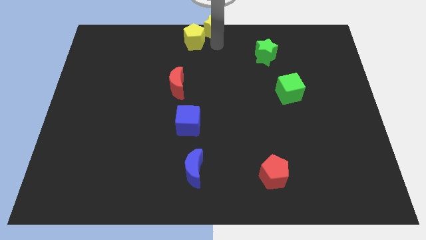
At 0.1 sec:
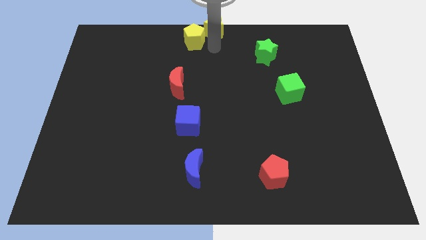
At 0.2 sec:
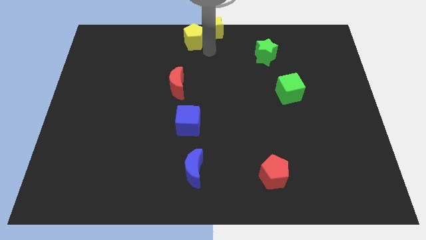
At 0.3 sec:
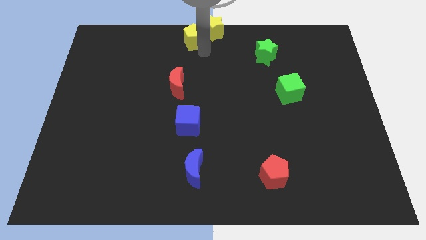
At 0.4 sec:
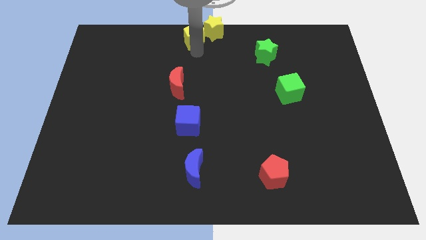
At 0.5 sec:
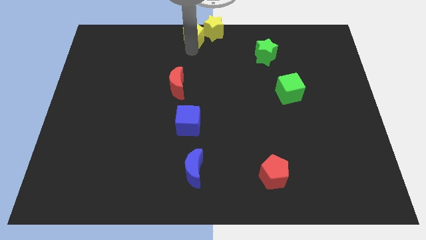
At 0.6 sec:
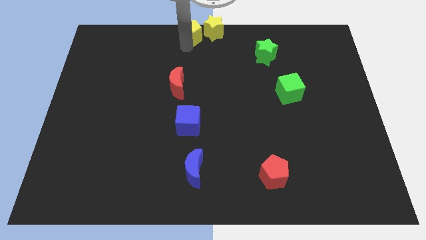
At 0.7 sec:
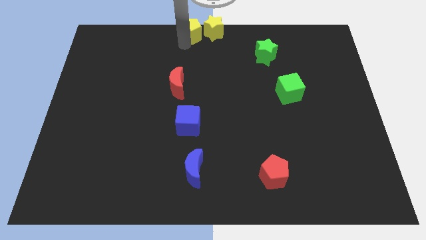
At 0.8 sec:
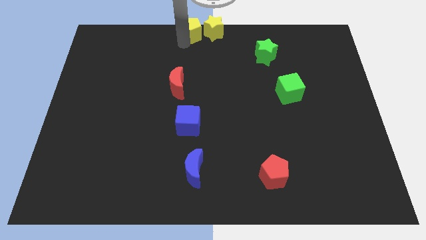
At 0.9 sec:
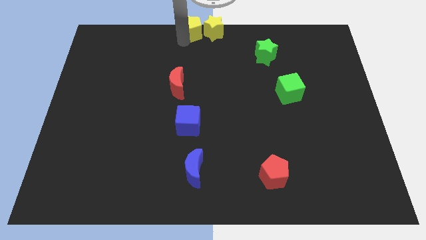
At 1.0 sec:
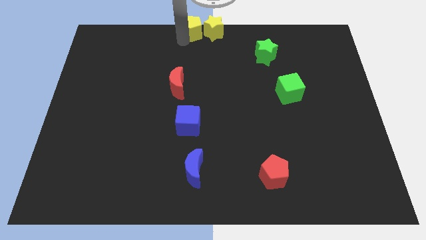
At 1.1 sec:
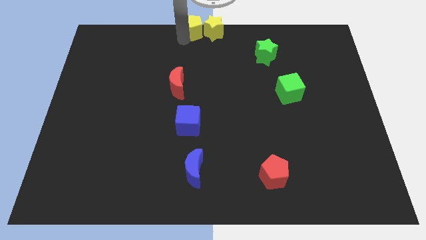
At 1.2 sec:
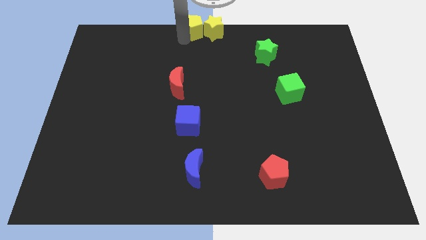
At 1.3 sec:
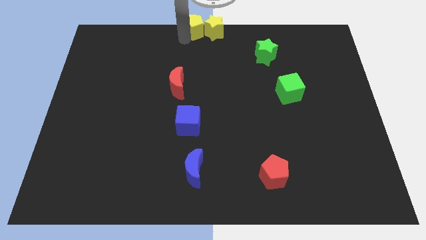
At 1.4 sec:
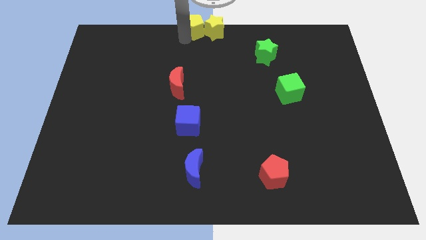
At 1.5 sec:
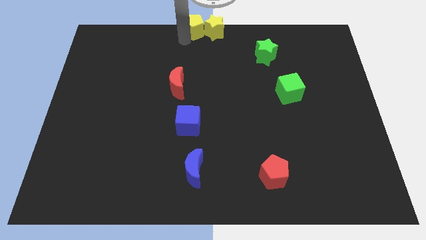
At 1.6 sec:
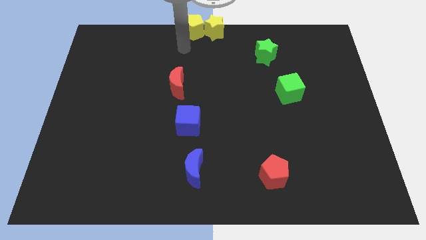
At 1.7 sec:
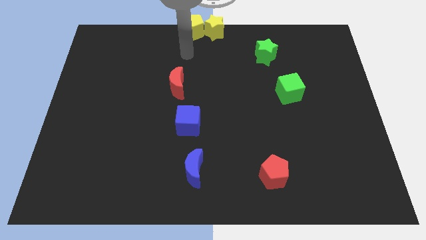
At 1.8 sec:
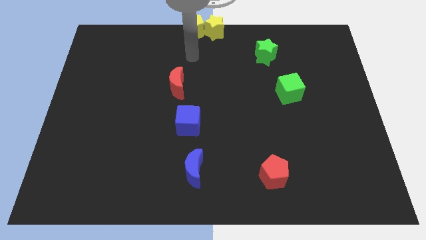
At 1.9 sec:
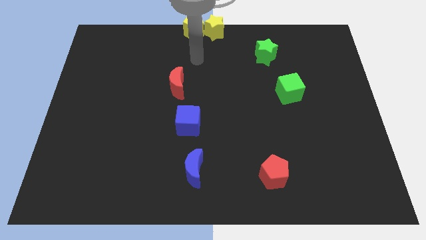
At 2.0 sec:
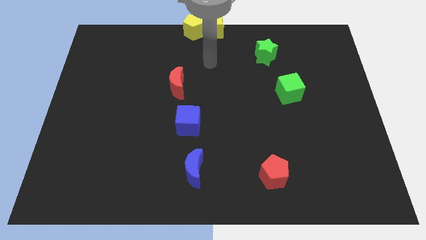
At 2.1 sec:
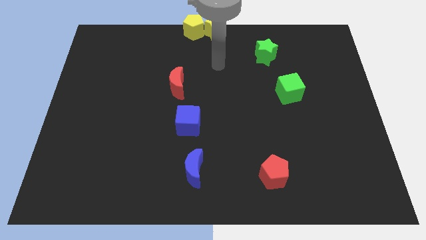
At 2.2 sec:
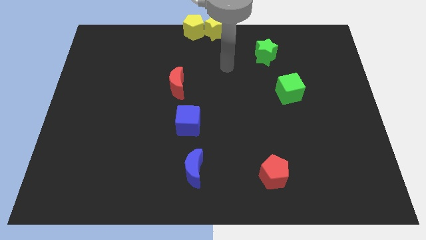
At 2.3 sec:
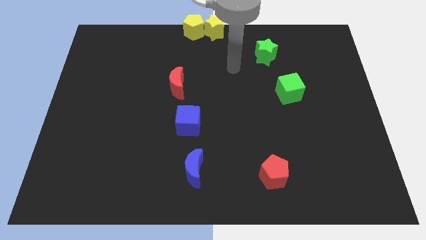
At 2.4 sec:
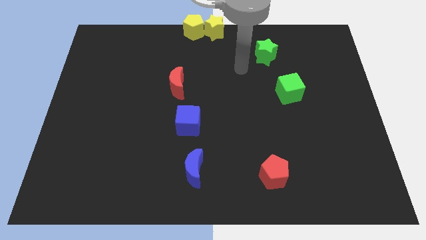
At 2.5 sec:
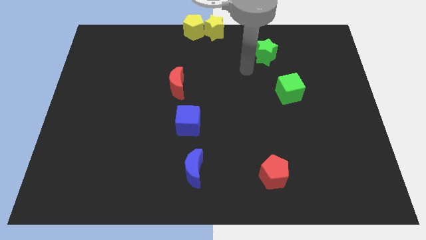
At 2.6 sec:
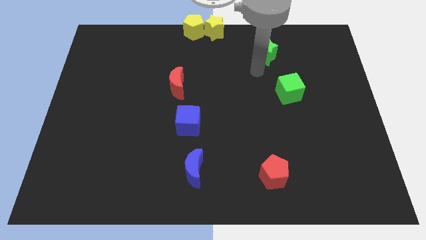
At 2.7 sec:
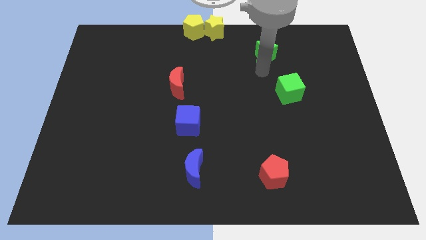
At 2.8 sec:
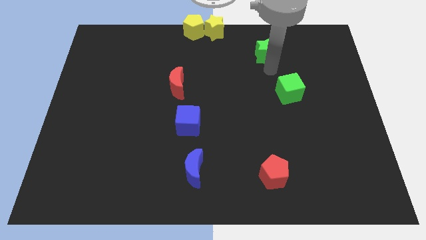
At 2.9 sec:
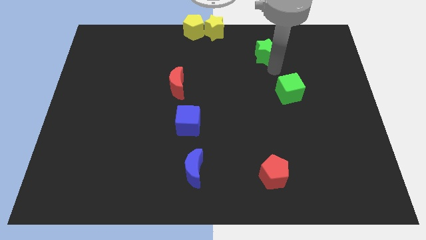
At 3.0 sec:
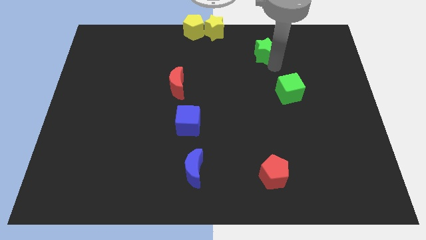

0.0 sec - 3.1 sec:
place the yellow pentagon left to the yellow star

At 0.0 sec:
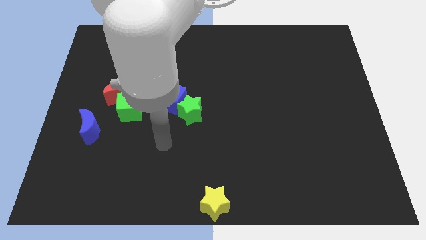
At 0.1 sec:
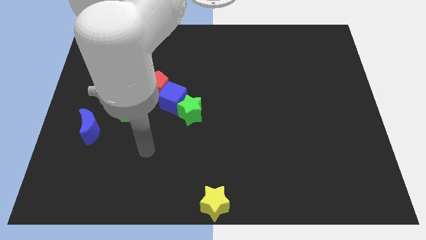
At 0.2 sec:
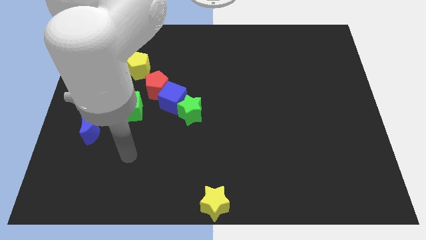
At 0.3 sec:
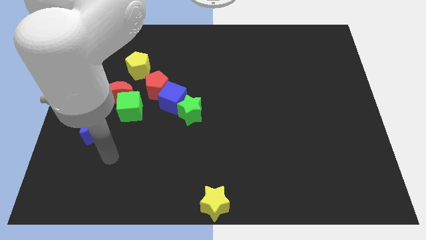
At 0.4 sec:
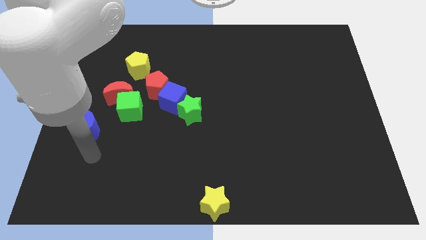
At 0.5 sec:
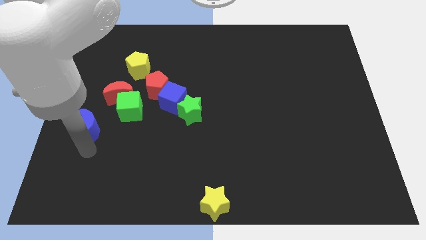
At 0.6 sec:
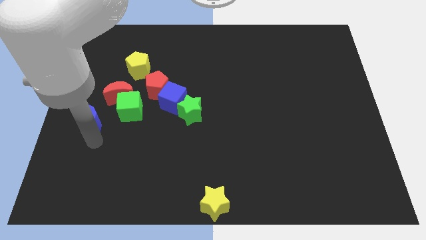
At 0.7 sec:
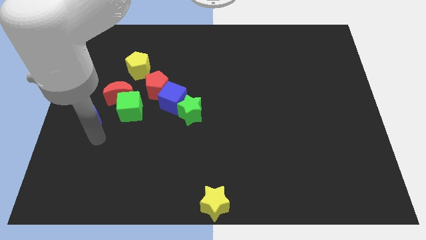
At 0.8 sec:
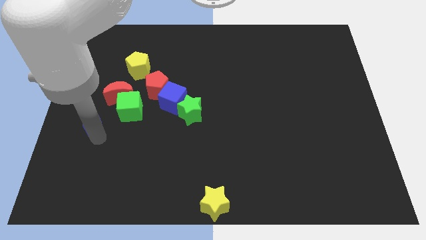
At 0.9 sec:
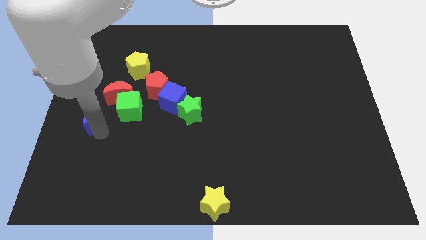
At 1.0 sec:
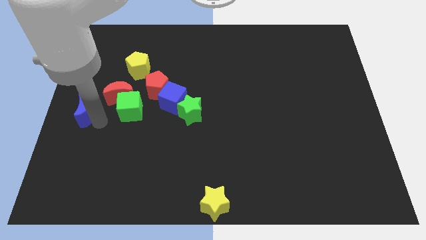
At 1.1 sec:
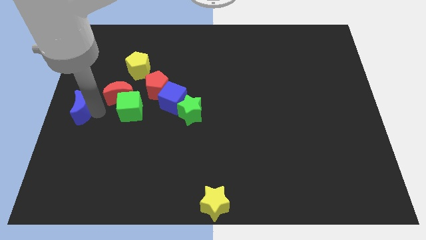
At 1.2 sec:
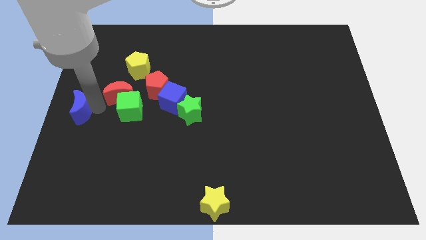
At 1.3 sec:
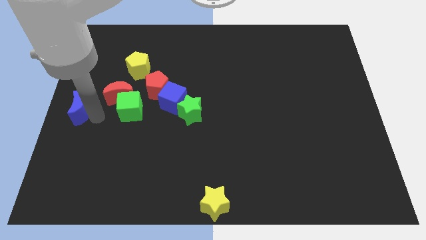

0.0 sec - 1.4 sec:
move the blue crescent parallel to the green cube

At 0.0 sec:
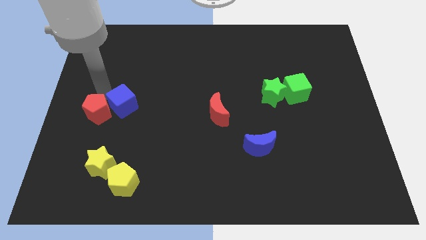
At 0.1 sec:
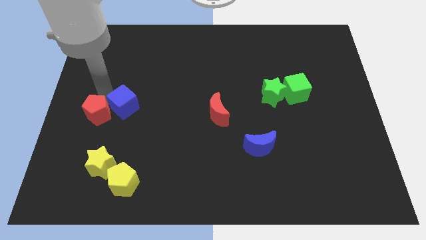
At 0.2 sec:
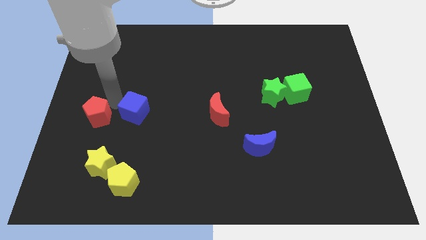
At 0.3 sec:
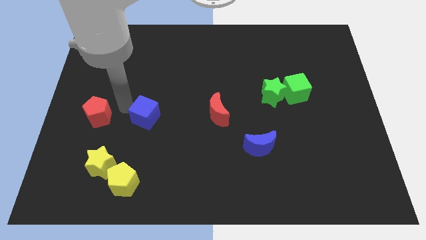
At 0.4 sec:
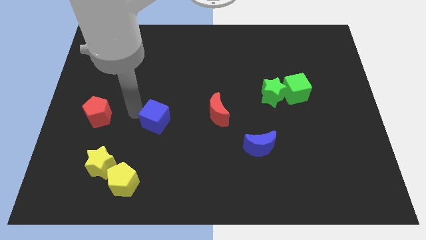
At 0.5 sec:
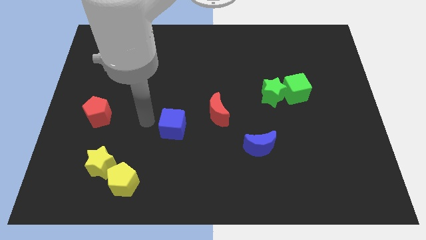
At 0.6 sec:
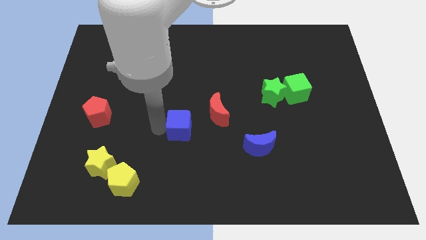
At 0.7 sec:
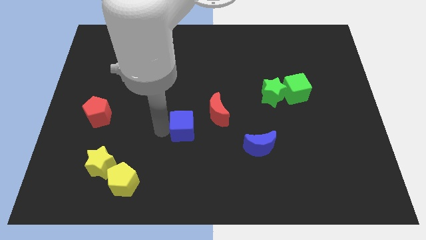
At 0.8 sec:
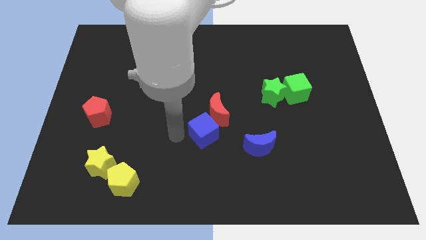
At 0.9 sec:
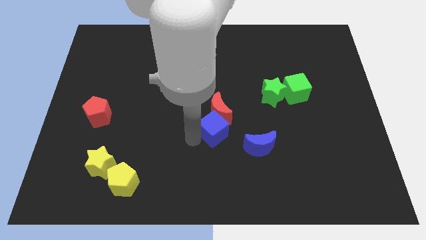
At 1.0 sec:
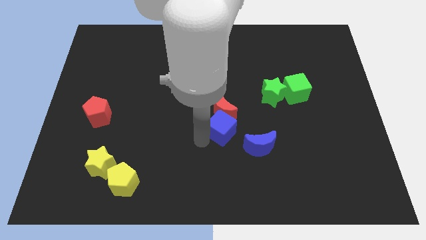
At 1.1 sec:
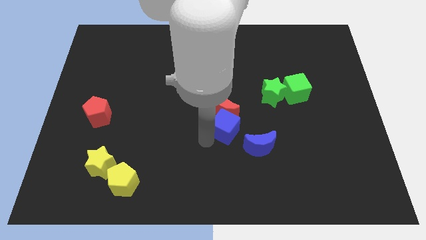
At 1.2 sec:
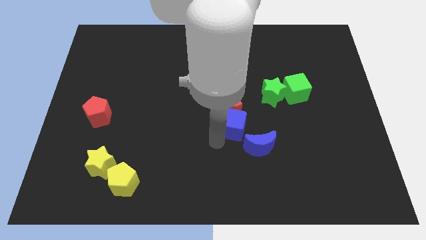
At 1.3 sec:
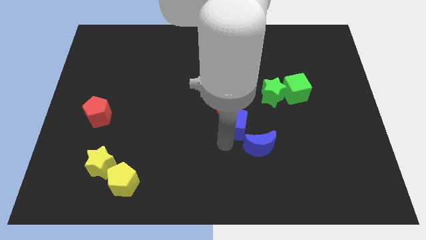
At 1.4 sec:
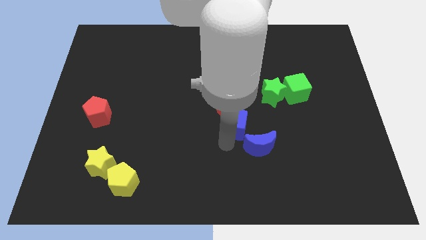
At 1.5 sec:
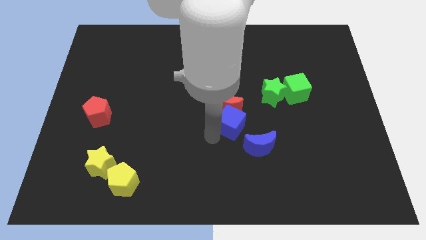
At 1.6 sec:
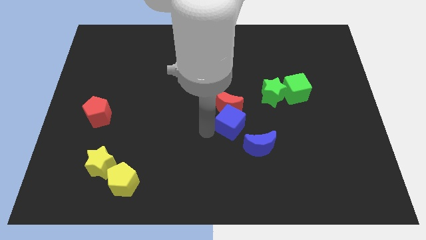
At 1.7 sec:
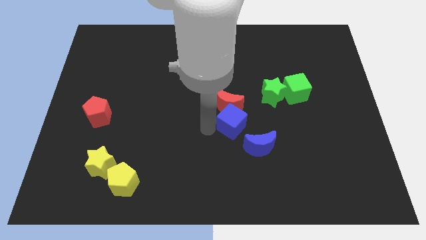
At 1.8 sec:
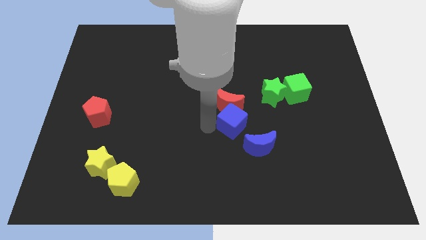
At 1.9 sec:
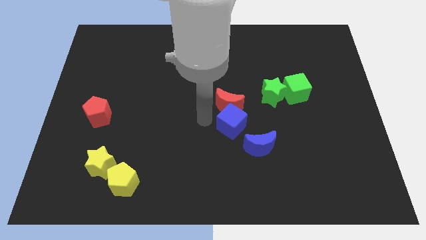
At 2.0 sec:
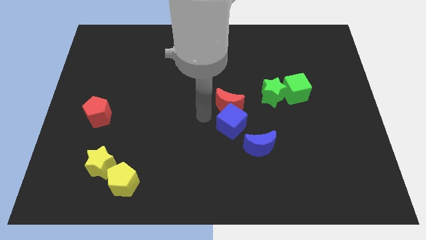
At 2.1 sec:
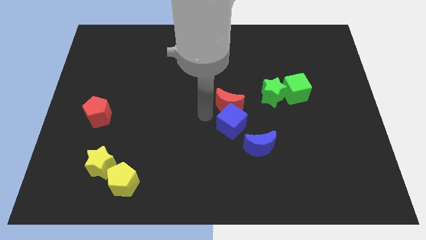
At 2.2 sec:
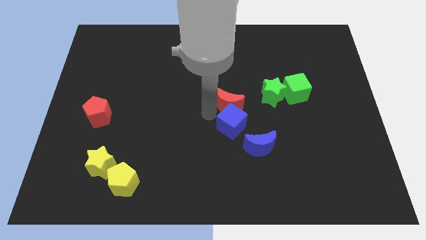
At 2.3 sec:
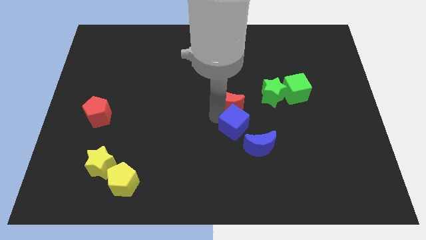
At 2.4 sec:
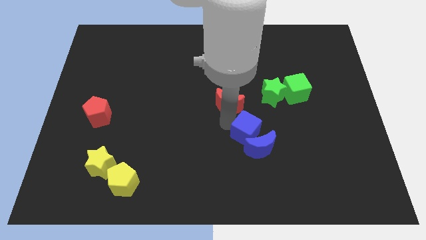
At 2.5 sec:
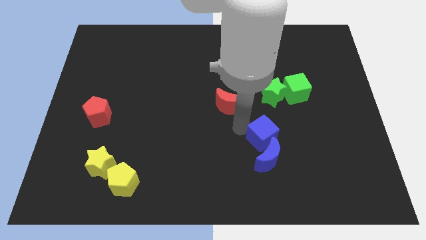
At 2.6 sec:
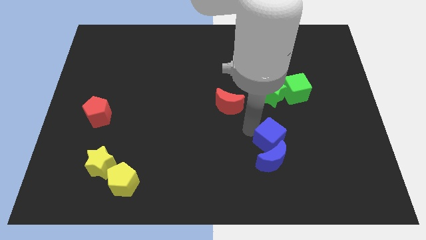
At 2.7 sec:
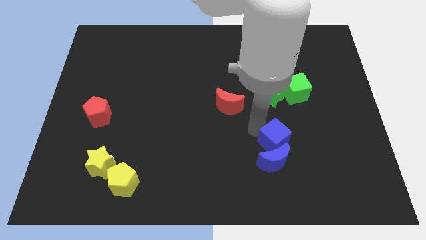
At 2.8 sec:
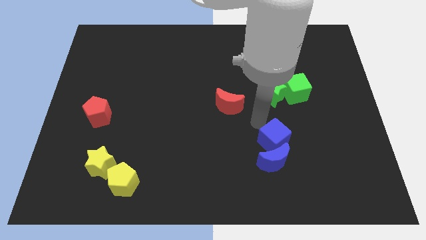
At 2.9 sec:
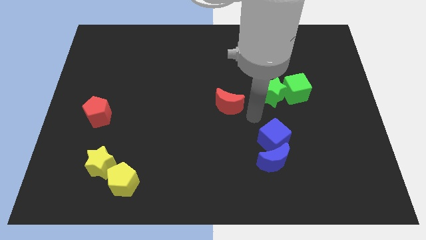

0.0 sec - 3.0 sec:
push the blue cube into the top side of the blue moon

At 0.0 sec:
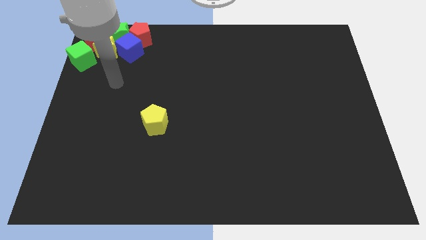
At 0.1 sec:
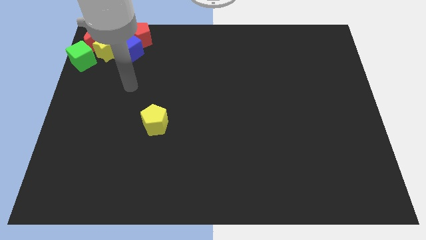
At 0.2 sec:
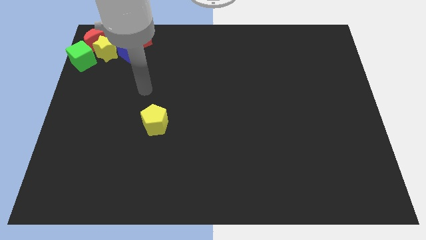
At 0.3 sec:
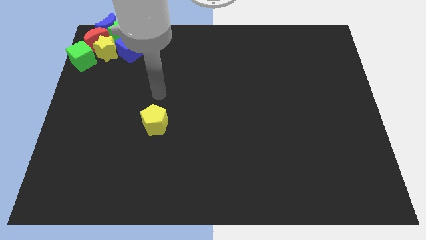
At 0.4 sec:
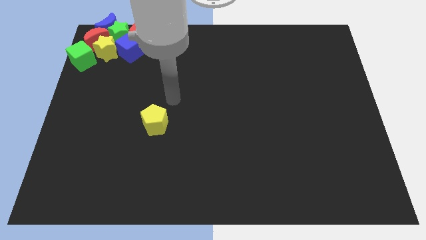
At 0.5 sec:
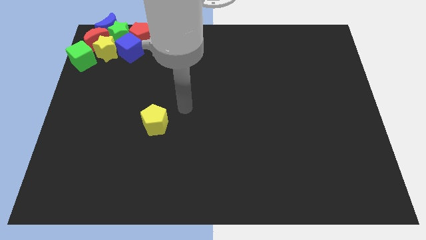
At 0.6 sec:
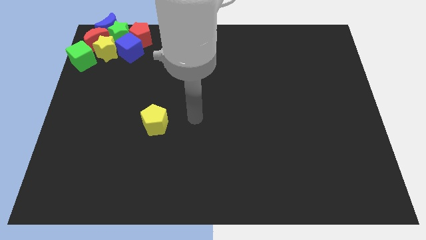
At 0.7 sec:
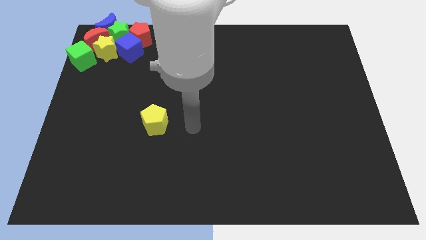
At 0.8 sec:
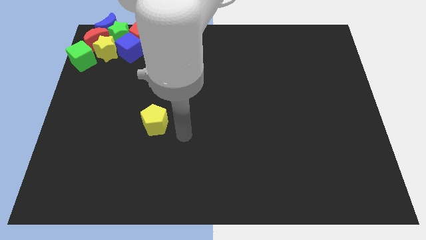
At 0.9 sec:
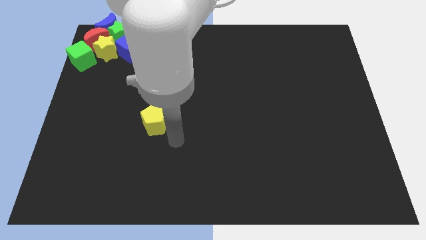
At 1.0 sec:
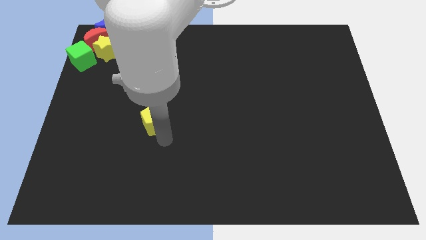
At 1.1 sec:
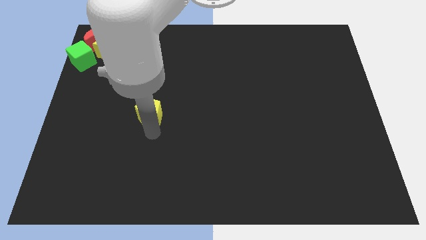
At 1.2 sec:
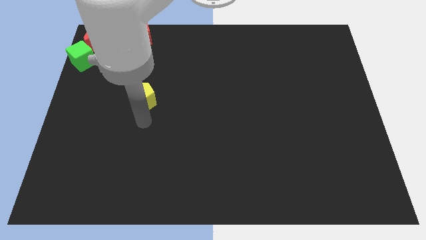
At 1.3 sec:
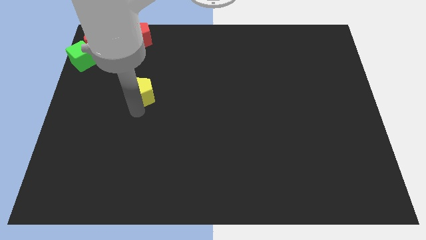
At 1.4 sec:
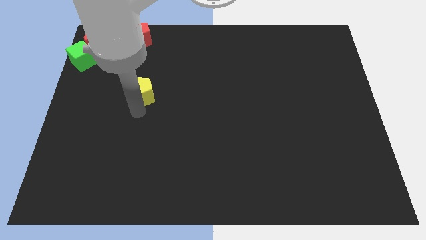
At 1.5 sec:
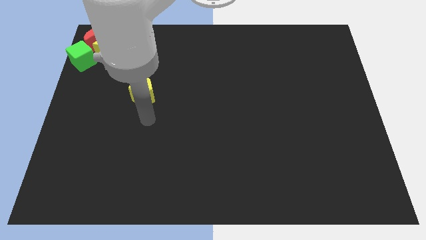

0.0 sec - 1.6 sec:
move the yellow pentagon up slightly
